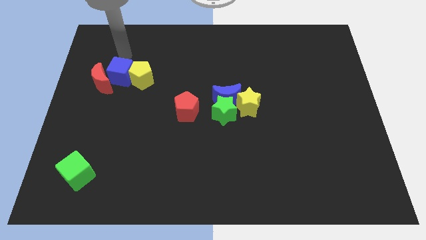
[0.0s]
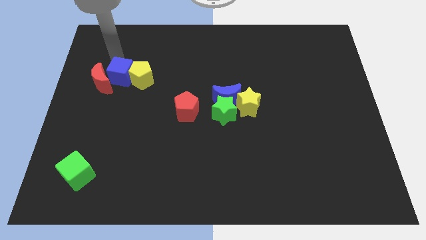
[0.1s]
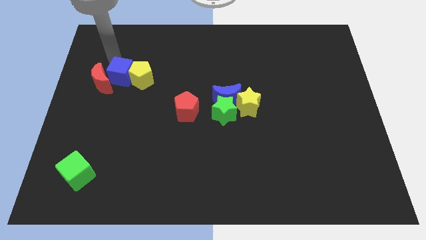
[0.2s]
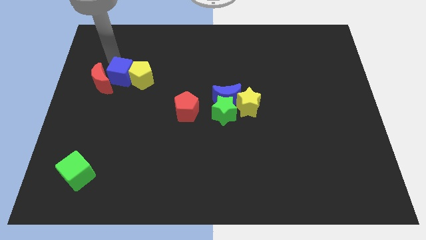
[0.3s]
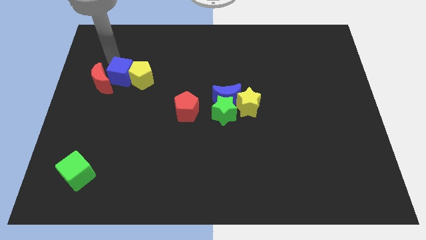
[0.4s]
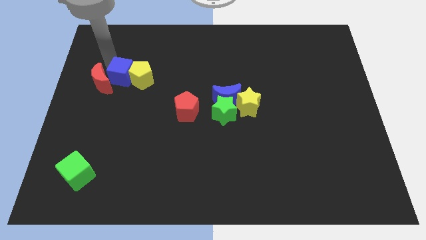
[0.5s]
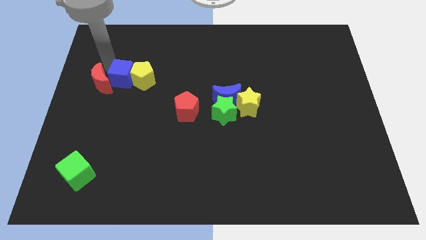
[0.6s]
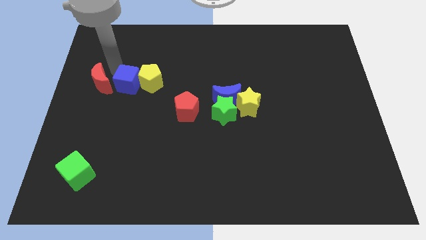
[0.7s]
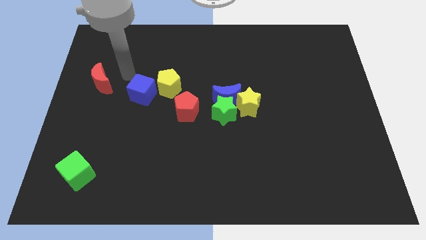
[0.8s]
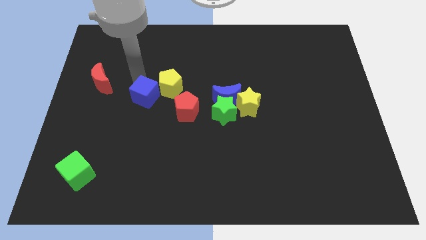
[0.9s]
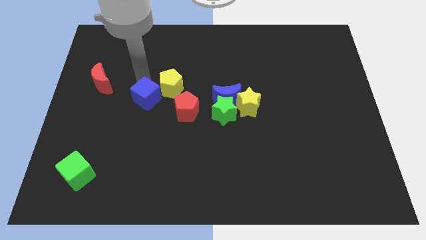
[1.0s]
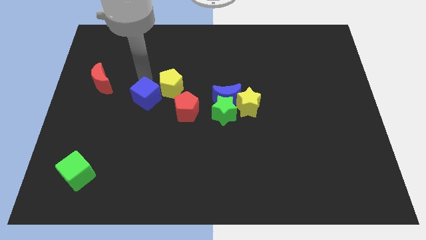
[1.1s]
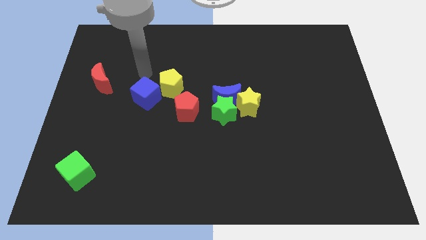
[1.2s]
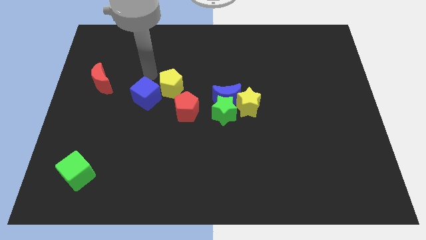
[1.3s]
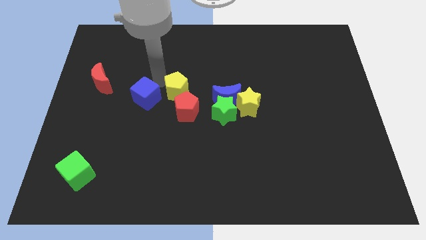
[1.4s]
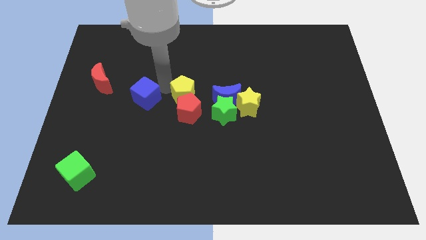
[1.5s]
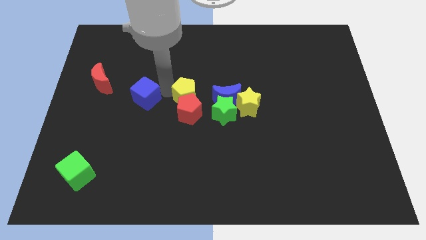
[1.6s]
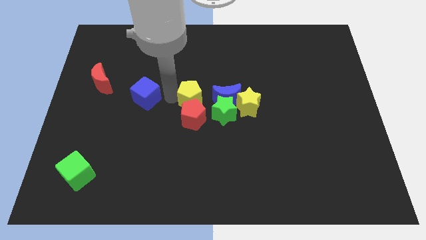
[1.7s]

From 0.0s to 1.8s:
move the yellow pentagon away from the blue cube

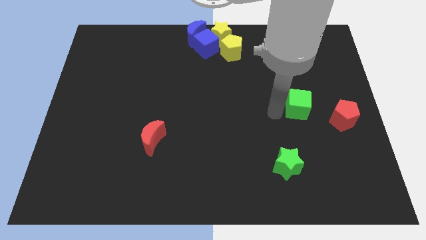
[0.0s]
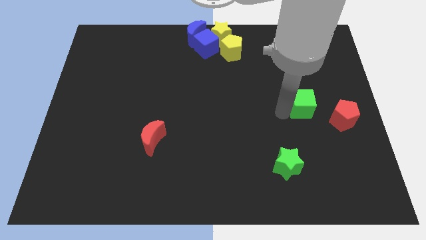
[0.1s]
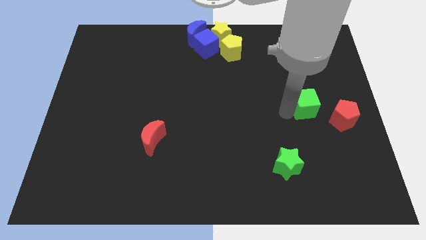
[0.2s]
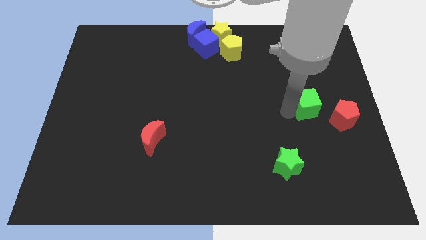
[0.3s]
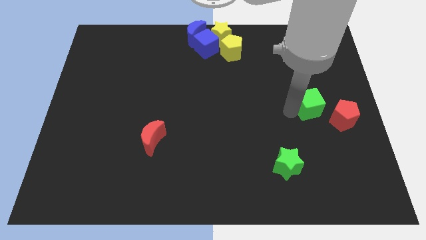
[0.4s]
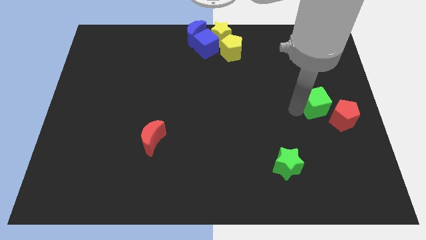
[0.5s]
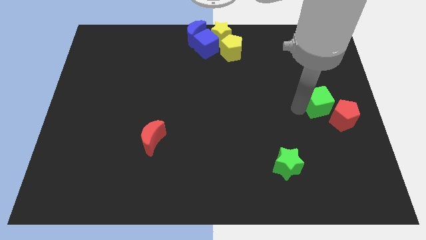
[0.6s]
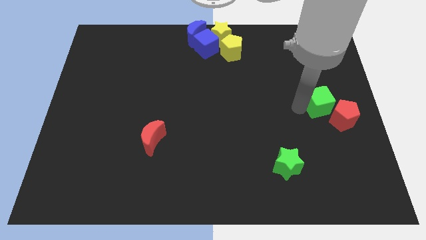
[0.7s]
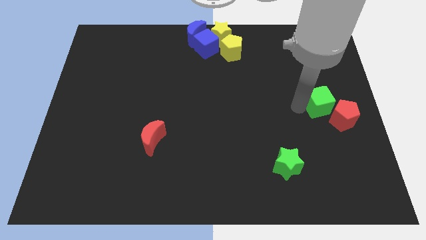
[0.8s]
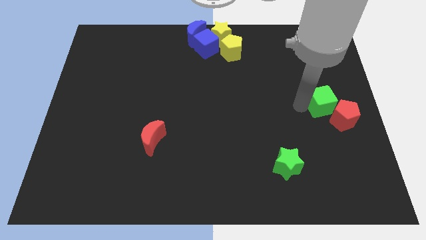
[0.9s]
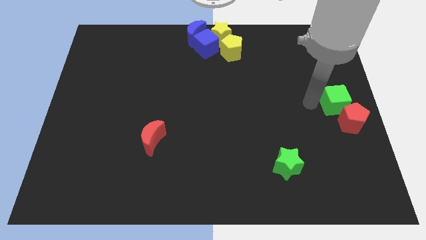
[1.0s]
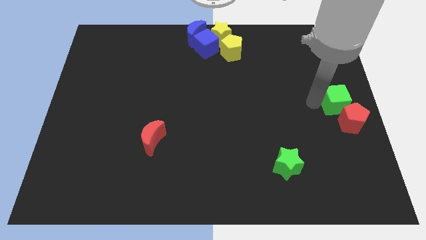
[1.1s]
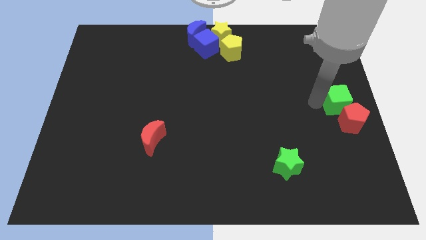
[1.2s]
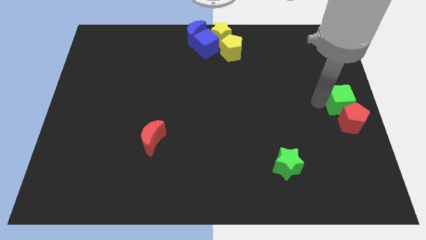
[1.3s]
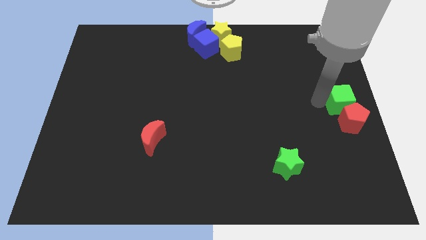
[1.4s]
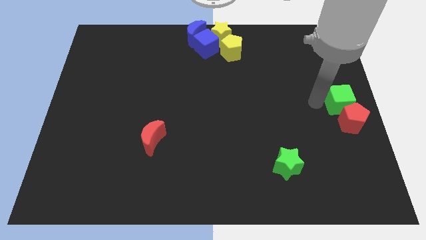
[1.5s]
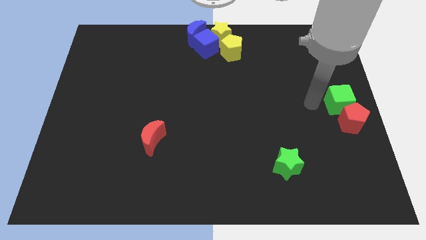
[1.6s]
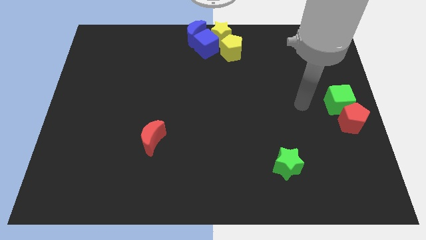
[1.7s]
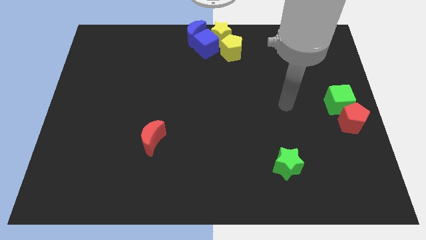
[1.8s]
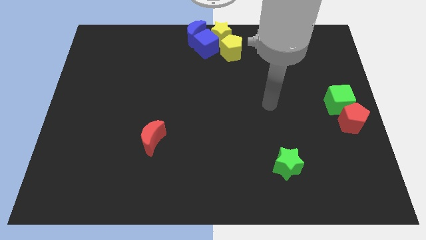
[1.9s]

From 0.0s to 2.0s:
place green cube above the red pentagon

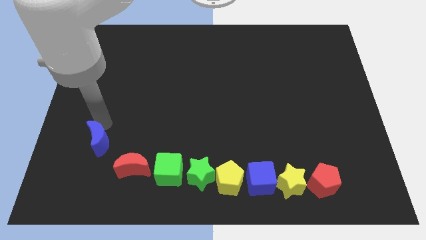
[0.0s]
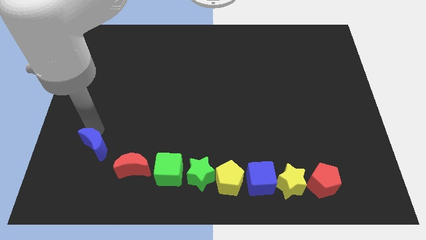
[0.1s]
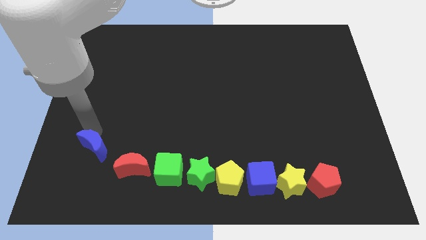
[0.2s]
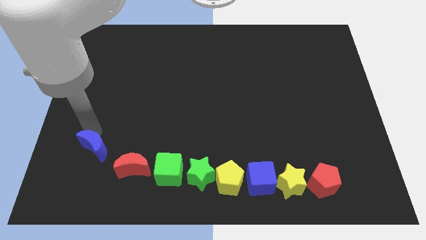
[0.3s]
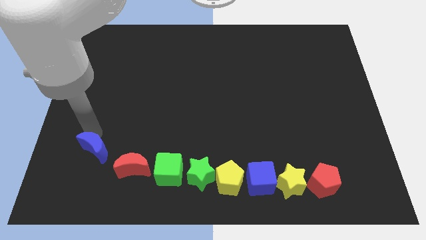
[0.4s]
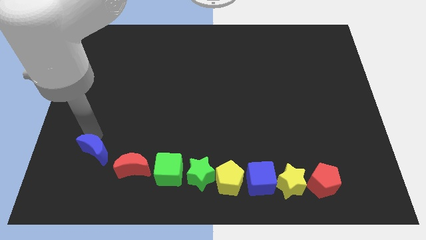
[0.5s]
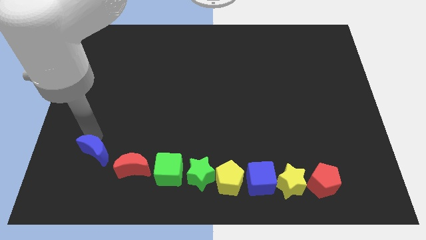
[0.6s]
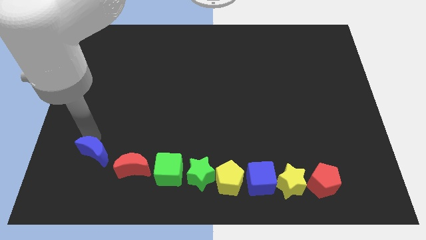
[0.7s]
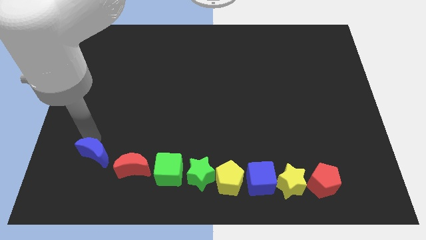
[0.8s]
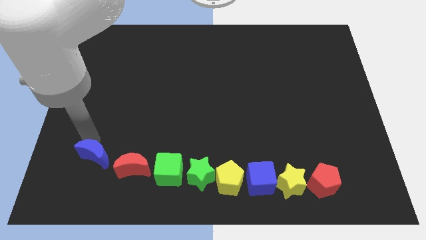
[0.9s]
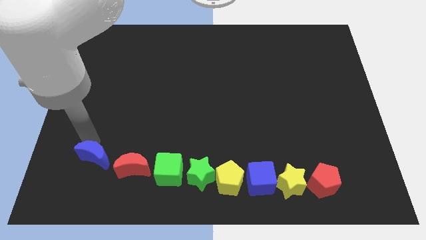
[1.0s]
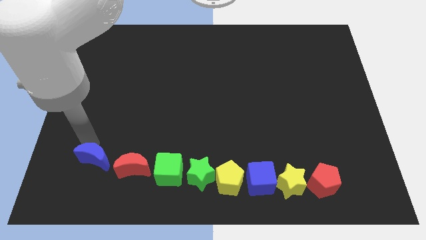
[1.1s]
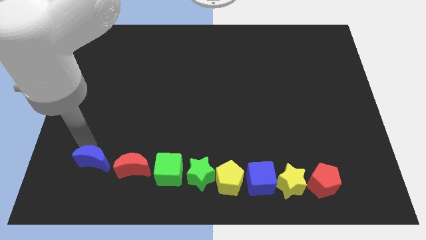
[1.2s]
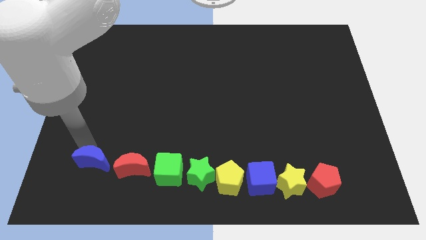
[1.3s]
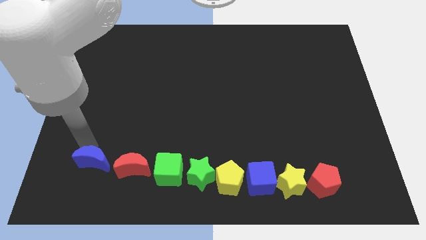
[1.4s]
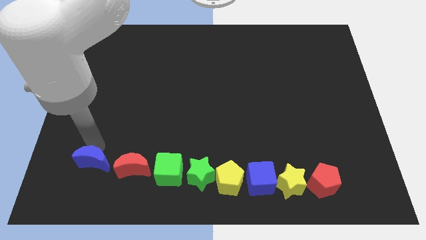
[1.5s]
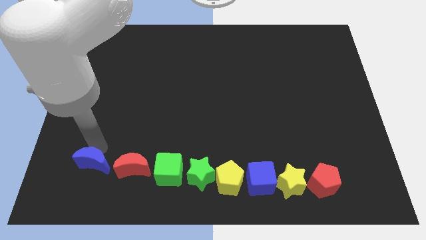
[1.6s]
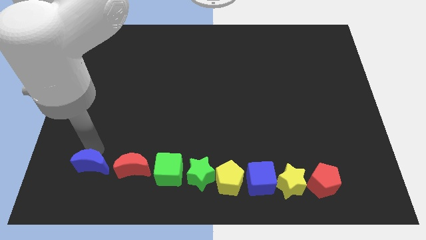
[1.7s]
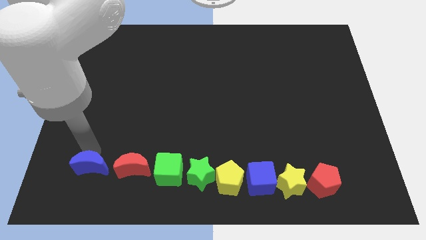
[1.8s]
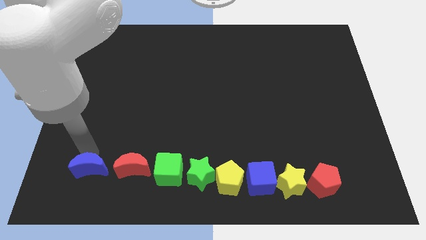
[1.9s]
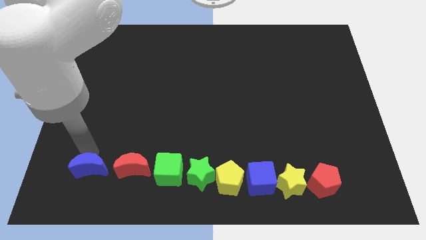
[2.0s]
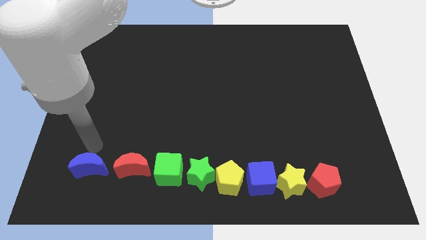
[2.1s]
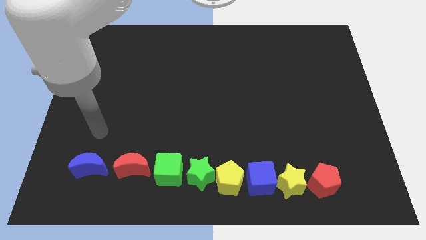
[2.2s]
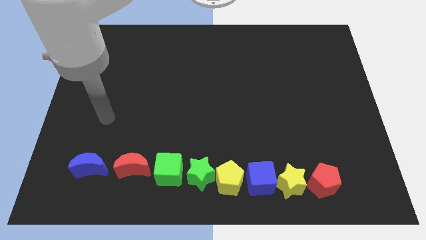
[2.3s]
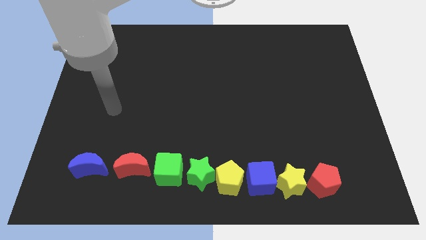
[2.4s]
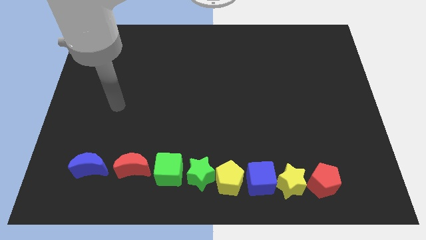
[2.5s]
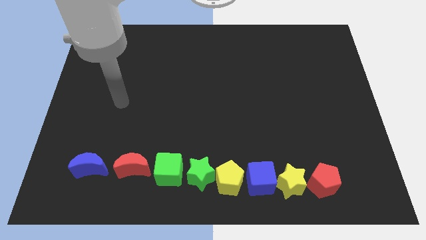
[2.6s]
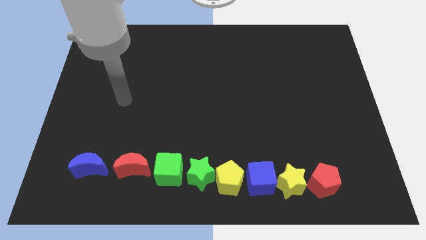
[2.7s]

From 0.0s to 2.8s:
move the blue crescent left to the red crescent

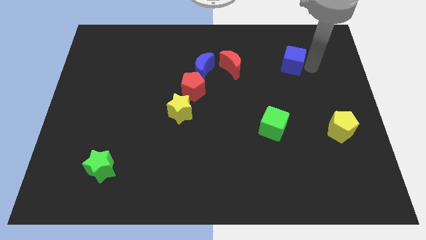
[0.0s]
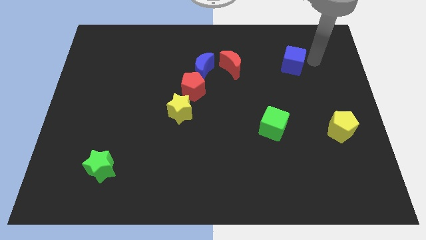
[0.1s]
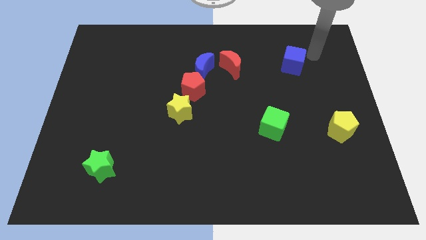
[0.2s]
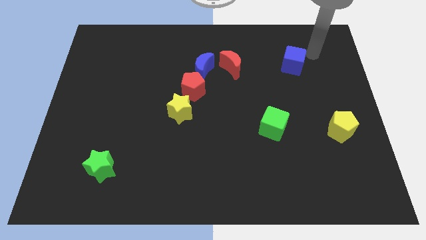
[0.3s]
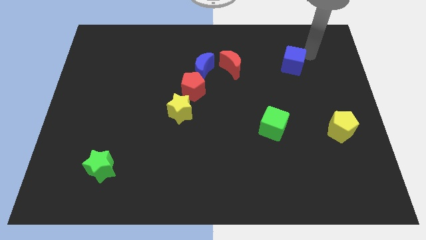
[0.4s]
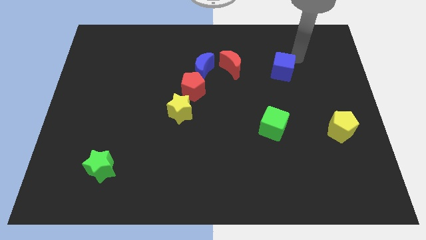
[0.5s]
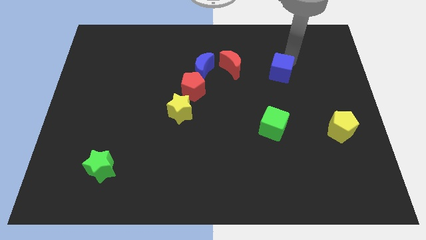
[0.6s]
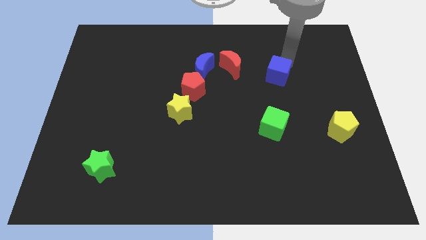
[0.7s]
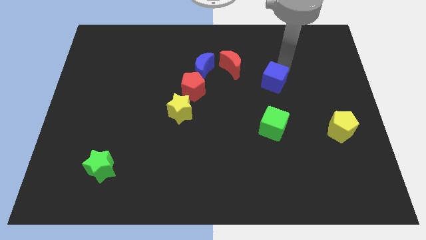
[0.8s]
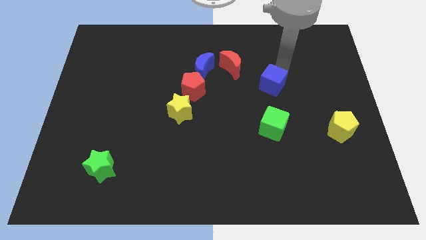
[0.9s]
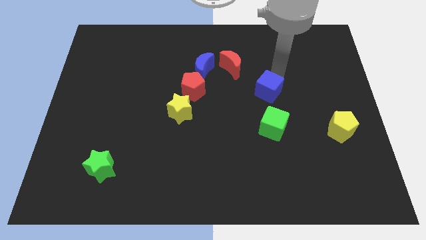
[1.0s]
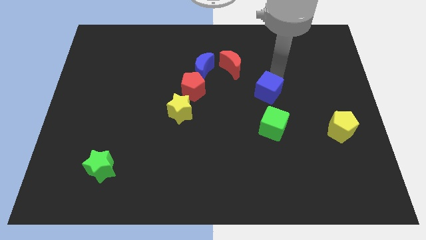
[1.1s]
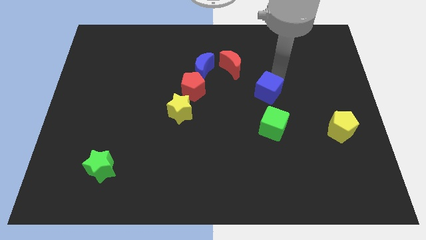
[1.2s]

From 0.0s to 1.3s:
put the blue cube above the green cube

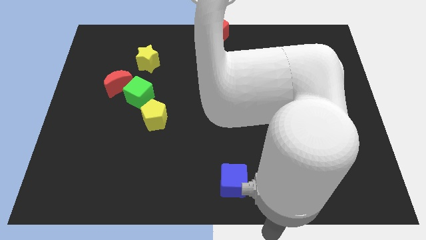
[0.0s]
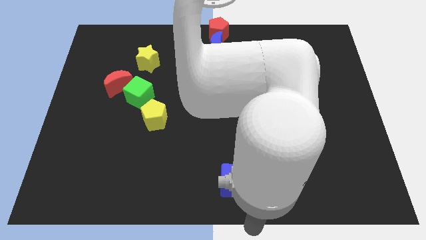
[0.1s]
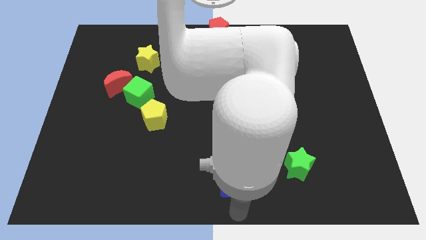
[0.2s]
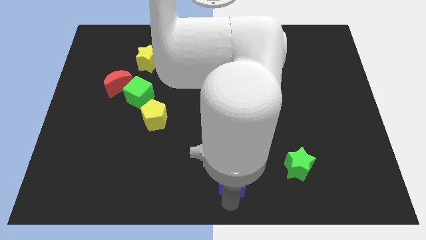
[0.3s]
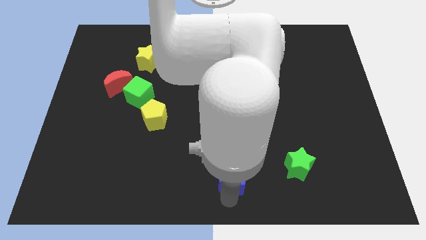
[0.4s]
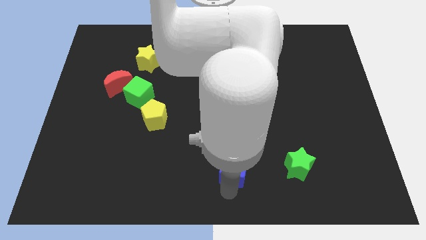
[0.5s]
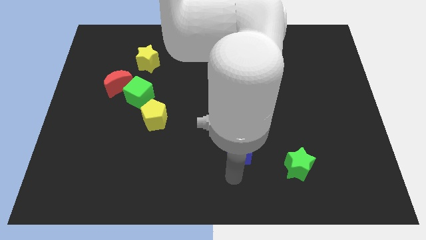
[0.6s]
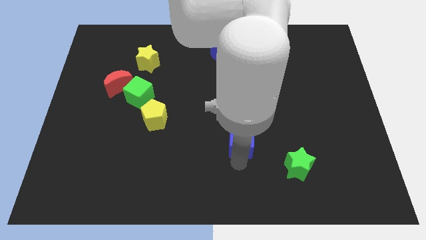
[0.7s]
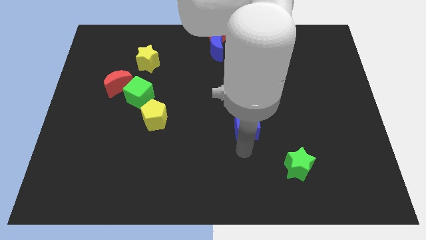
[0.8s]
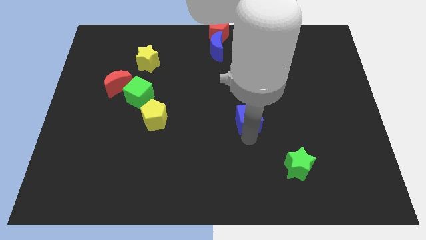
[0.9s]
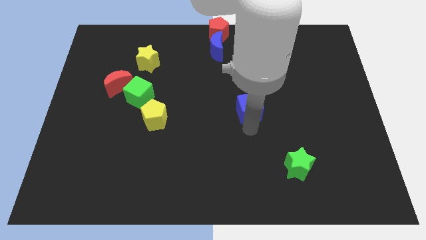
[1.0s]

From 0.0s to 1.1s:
move the blue cube slightly up

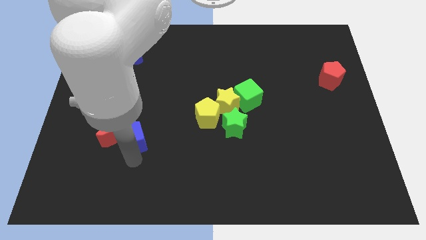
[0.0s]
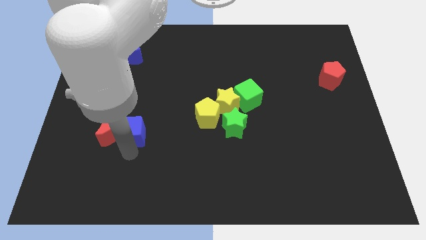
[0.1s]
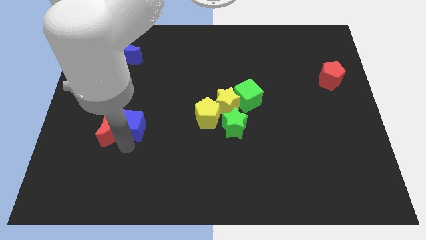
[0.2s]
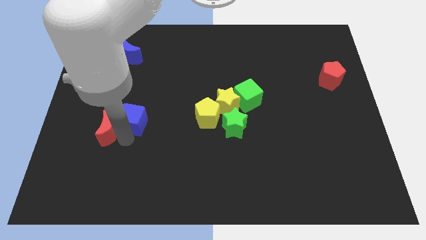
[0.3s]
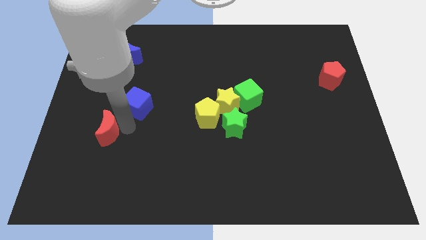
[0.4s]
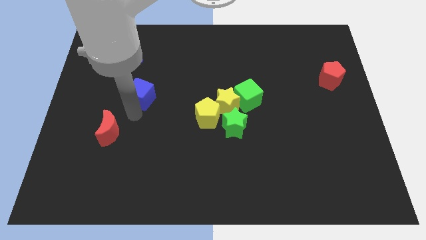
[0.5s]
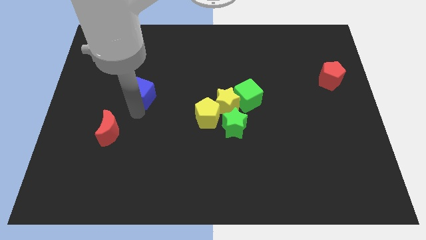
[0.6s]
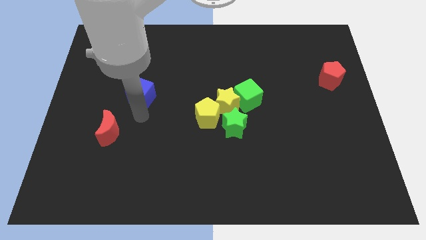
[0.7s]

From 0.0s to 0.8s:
separate the red moon and blue cube
